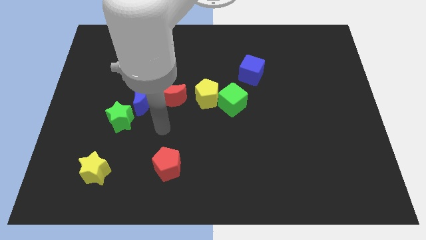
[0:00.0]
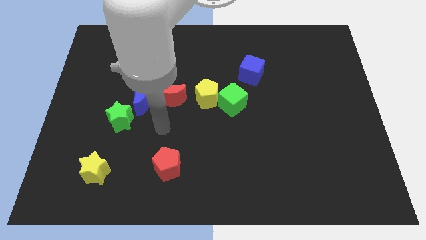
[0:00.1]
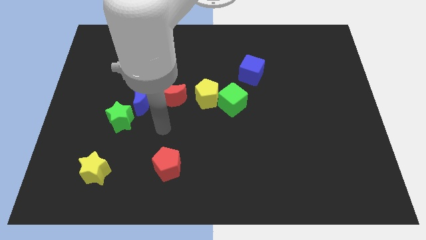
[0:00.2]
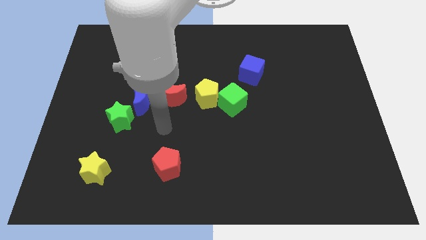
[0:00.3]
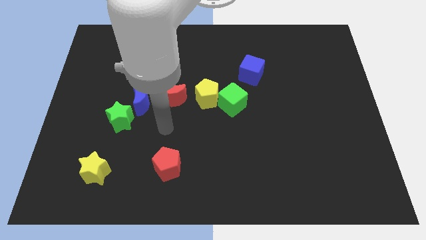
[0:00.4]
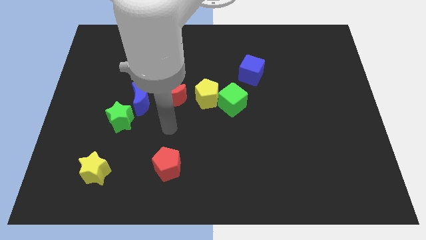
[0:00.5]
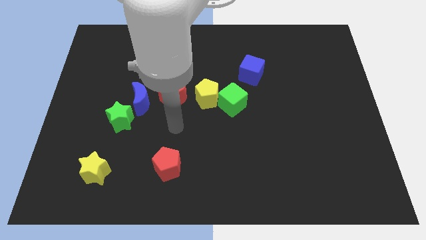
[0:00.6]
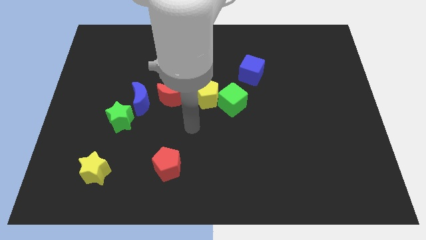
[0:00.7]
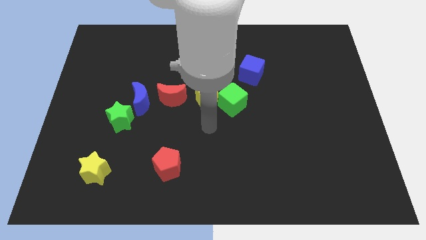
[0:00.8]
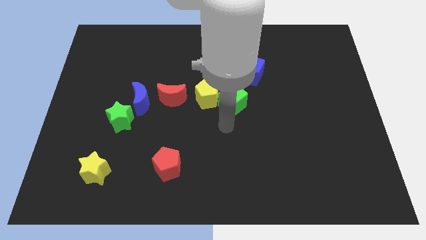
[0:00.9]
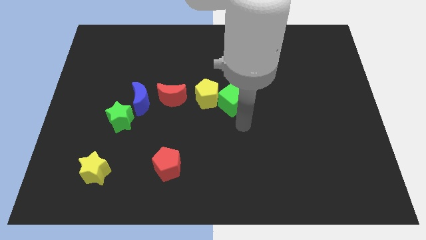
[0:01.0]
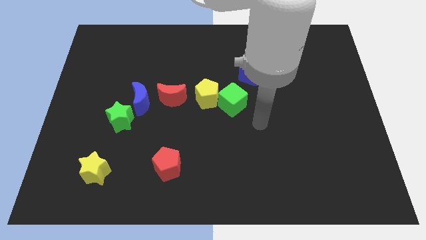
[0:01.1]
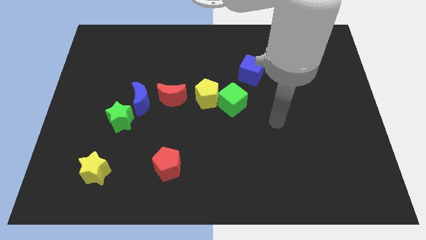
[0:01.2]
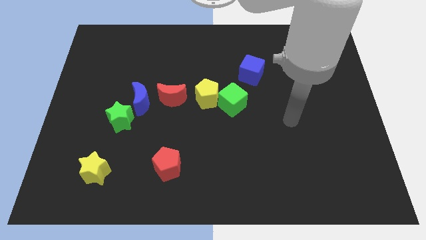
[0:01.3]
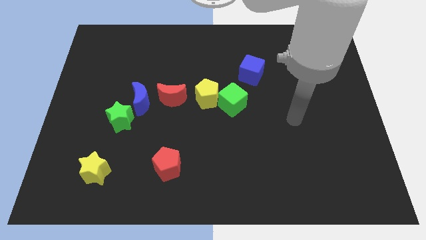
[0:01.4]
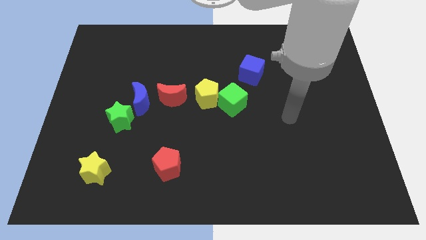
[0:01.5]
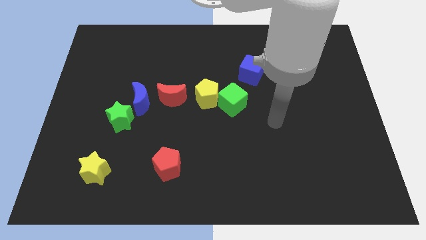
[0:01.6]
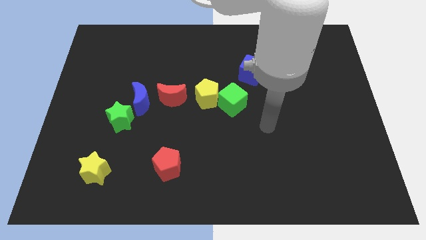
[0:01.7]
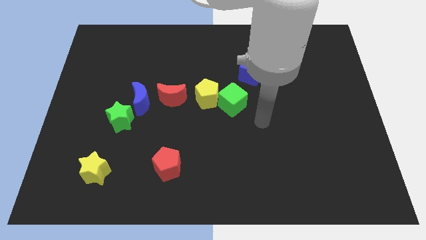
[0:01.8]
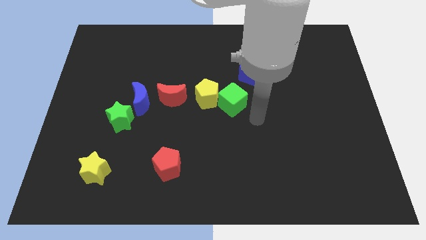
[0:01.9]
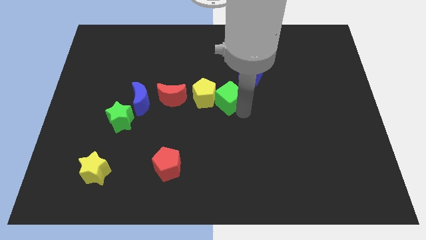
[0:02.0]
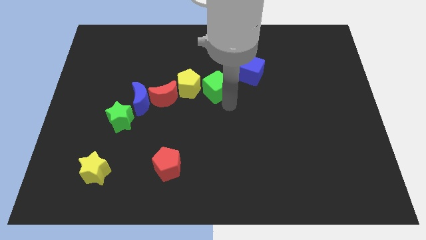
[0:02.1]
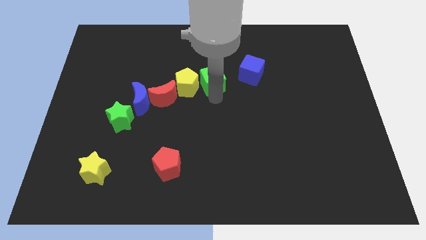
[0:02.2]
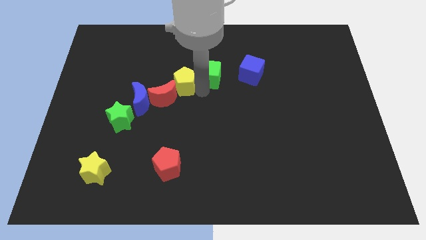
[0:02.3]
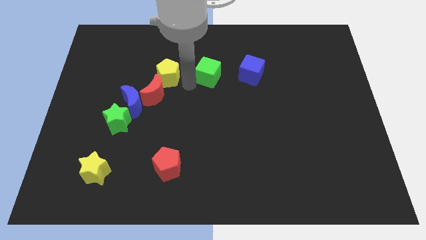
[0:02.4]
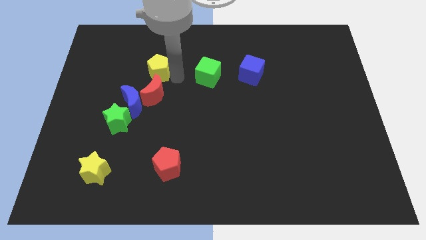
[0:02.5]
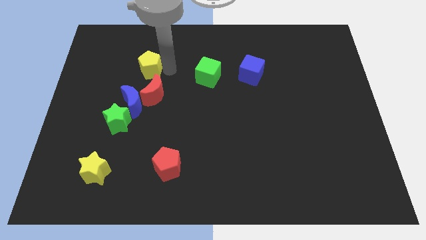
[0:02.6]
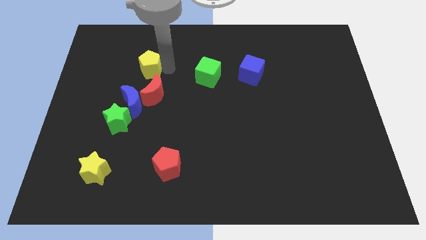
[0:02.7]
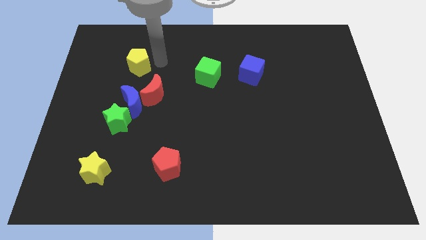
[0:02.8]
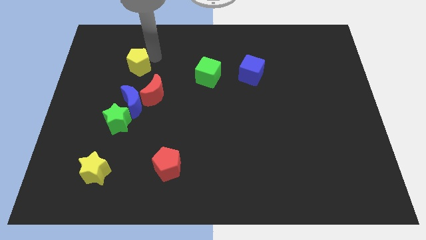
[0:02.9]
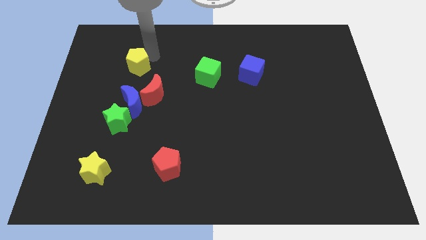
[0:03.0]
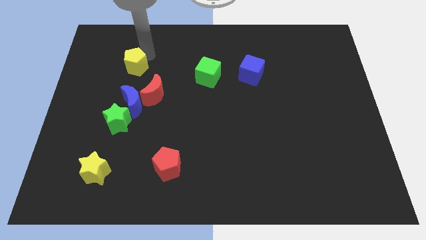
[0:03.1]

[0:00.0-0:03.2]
place the green cube left to the blue cube

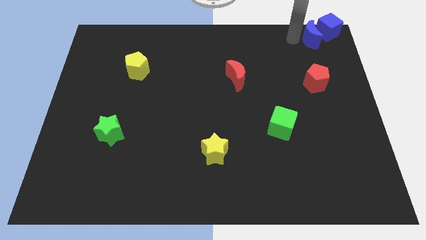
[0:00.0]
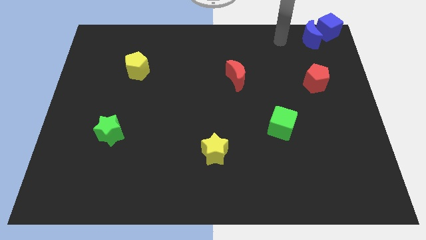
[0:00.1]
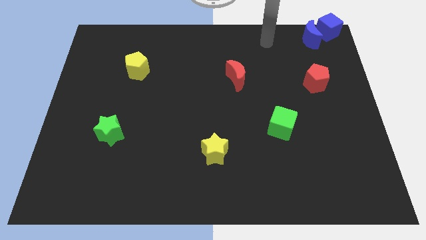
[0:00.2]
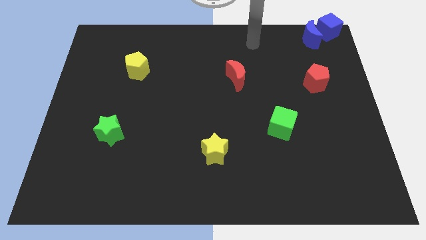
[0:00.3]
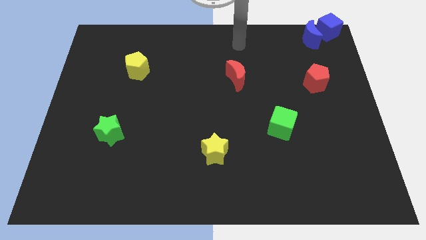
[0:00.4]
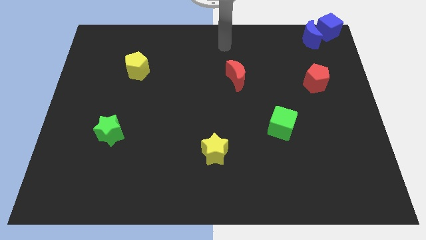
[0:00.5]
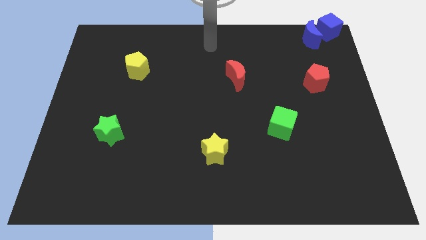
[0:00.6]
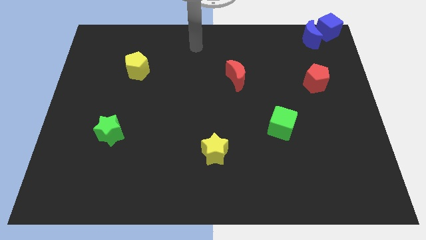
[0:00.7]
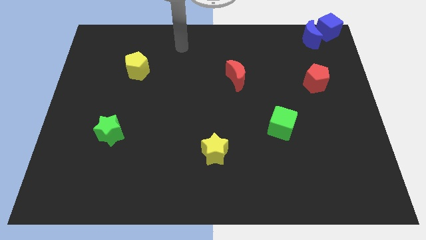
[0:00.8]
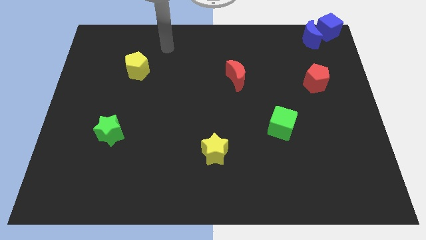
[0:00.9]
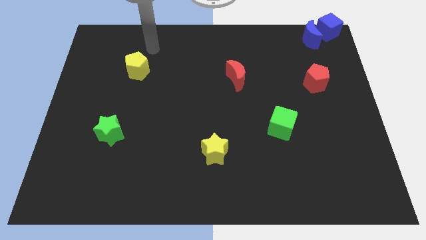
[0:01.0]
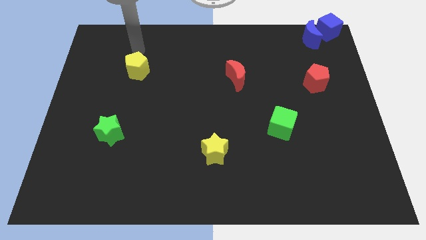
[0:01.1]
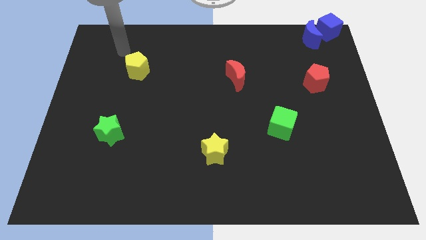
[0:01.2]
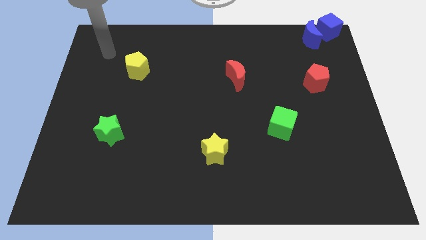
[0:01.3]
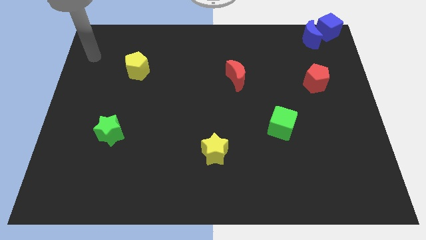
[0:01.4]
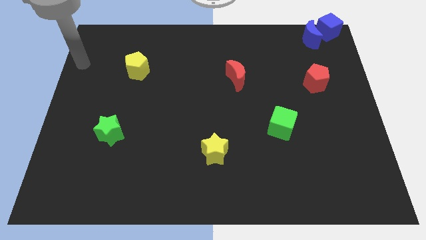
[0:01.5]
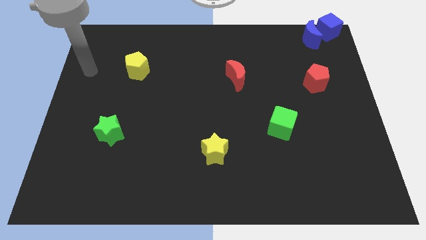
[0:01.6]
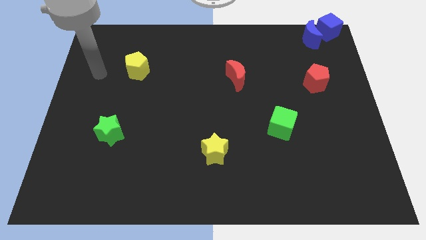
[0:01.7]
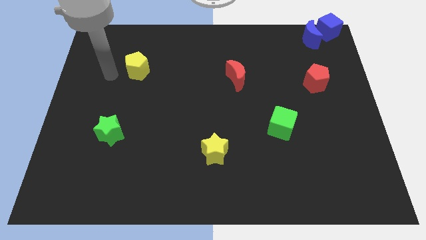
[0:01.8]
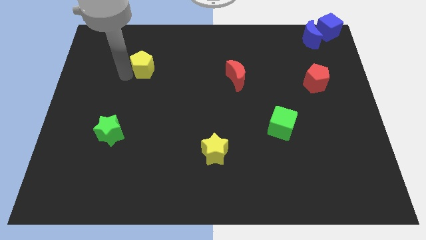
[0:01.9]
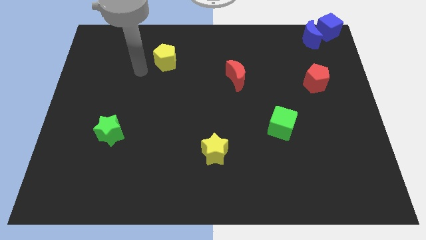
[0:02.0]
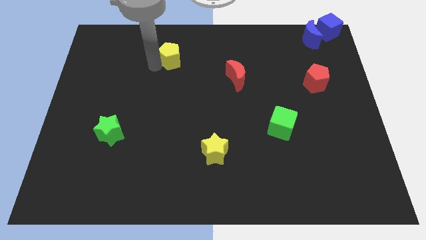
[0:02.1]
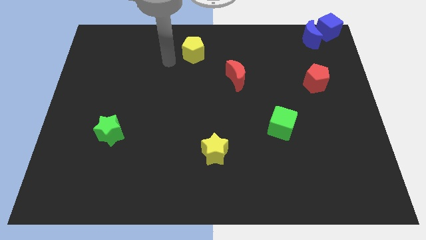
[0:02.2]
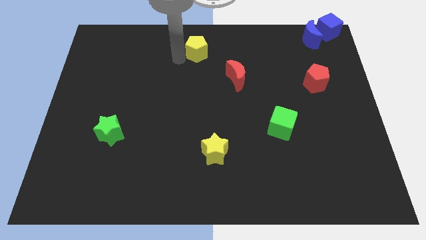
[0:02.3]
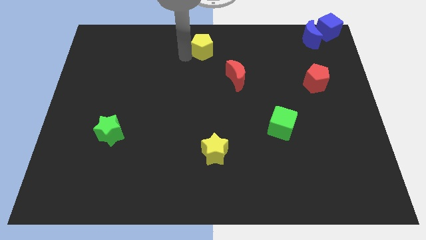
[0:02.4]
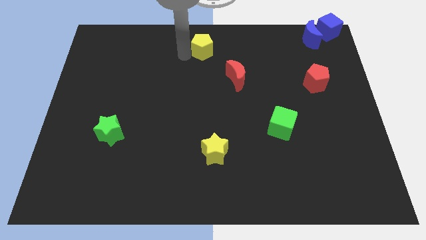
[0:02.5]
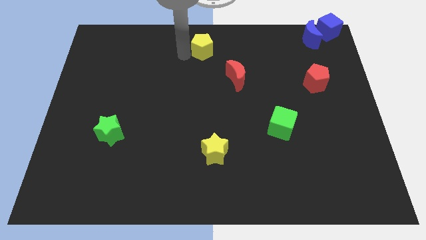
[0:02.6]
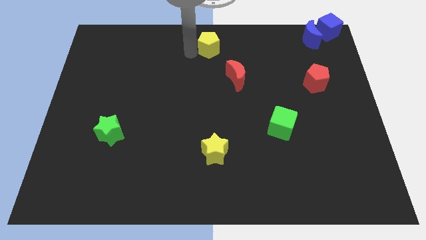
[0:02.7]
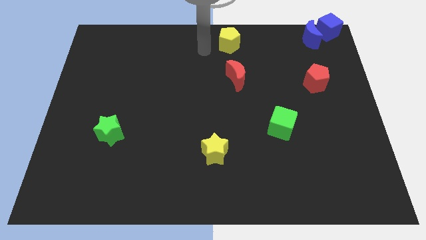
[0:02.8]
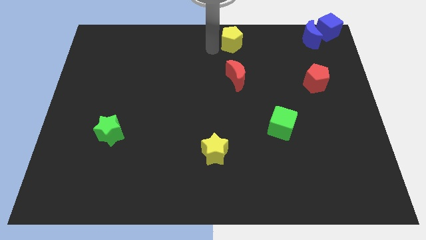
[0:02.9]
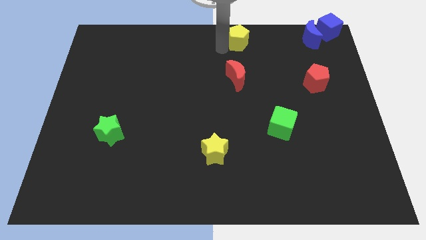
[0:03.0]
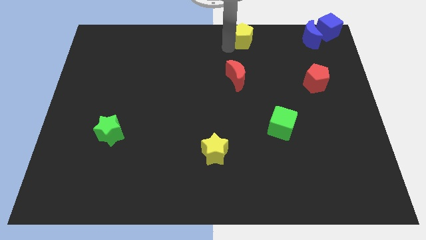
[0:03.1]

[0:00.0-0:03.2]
place the yellow pentagon at the top side of the red crescent

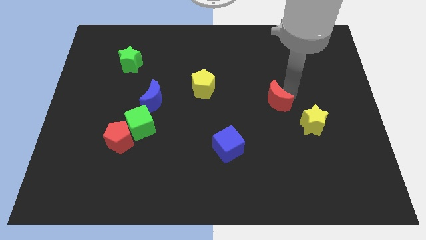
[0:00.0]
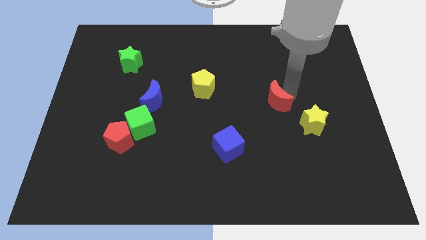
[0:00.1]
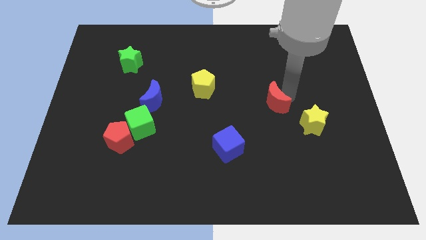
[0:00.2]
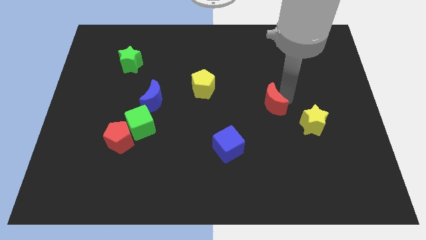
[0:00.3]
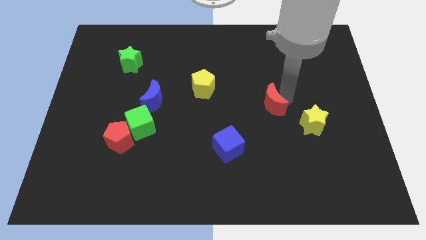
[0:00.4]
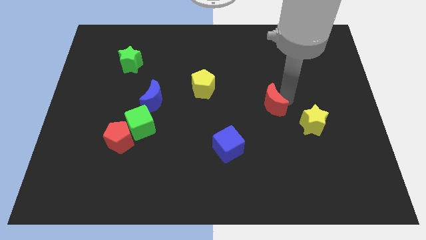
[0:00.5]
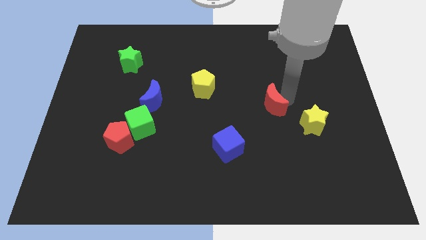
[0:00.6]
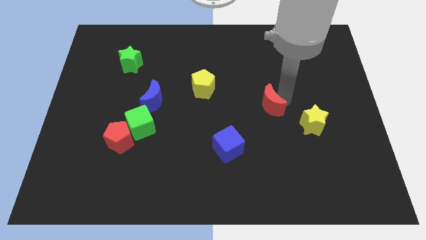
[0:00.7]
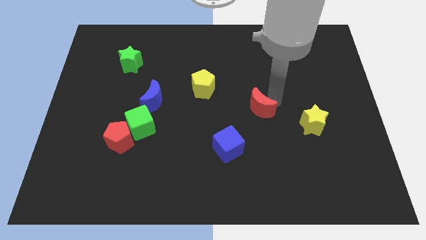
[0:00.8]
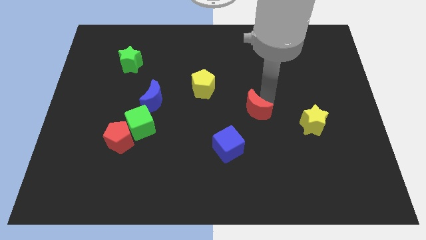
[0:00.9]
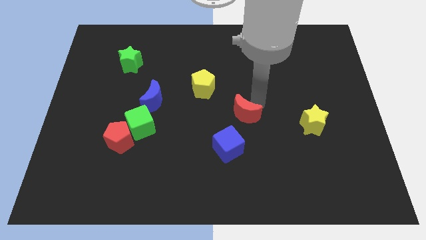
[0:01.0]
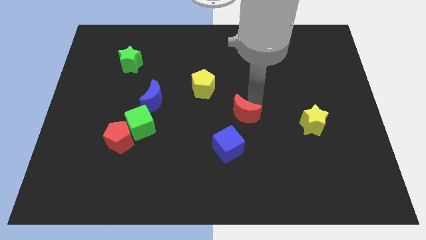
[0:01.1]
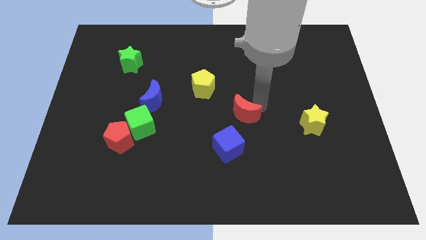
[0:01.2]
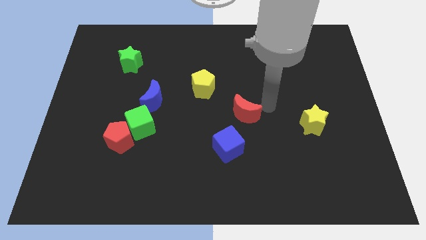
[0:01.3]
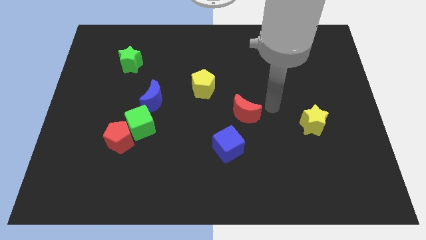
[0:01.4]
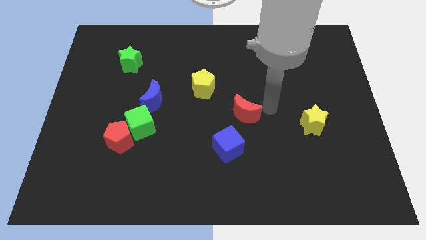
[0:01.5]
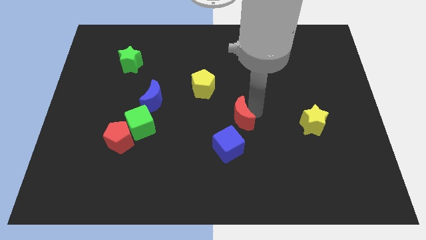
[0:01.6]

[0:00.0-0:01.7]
push the red crescent towards the blue cube

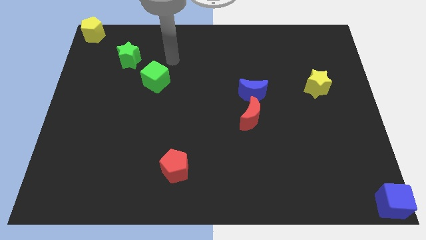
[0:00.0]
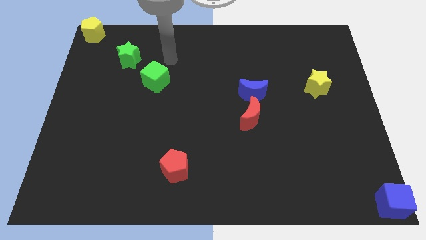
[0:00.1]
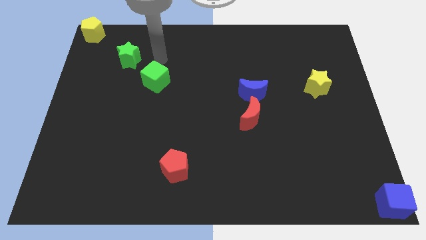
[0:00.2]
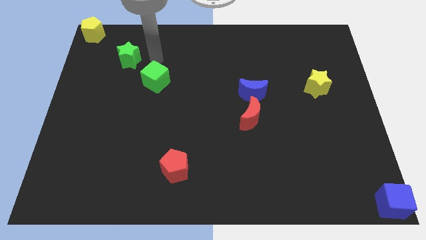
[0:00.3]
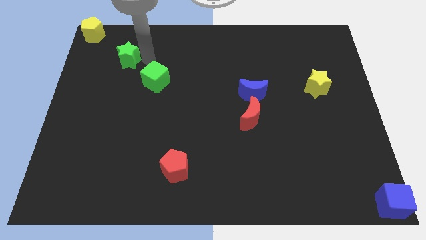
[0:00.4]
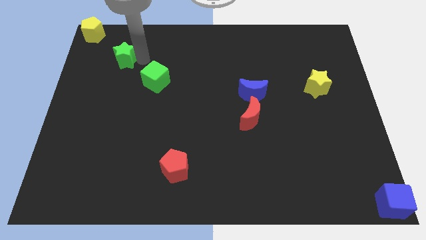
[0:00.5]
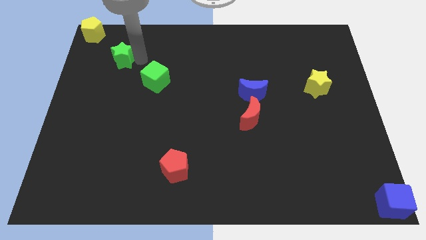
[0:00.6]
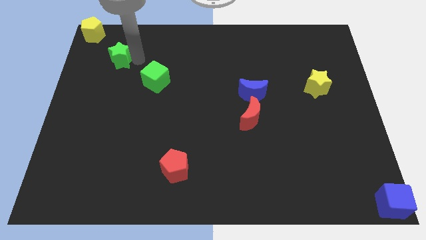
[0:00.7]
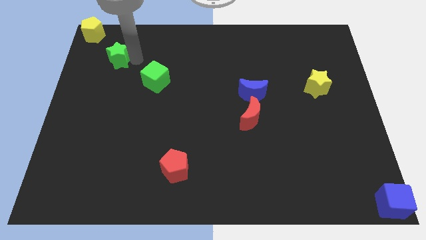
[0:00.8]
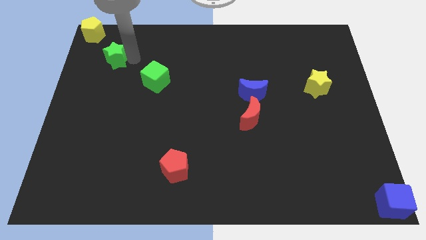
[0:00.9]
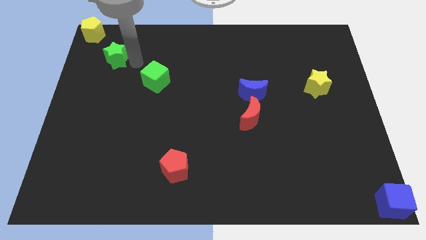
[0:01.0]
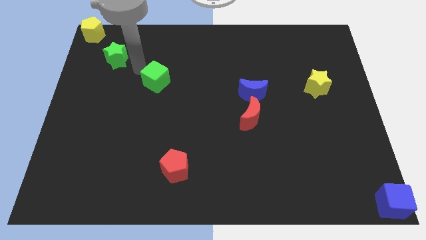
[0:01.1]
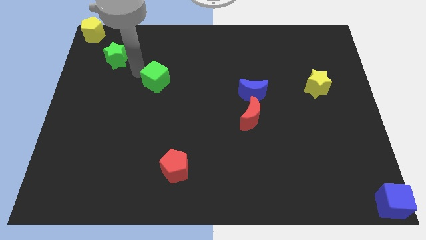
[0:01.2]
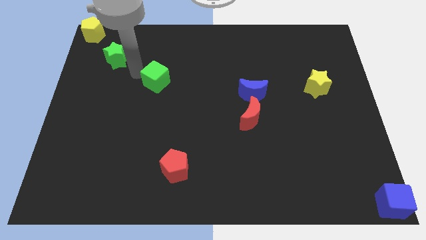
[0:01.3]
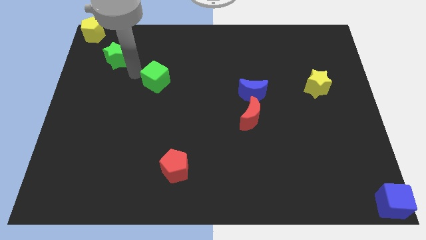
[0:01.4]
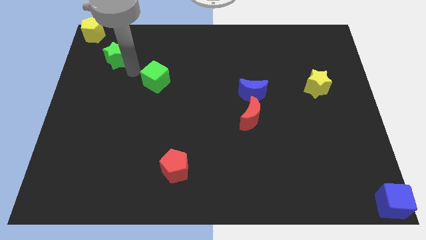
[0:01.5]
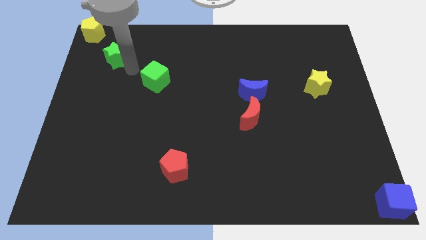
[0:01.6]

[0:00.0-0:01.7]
place the green star in between the yellow pentagon and the green cube
